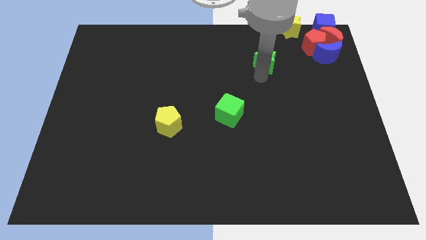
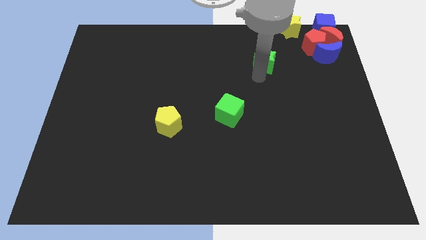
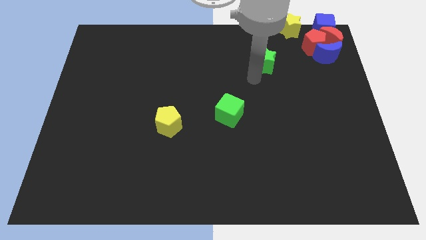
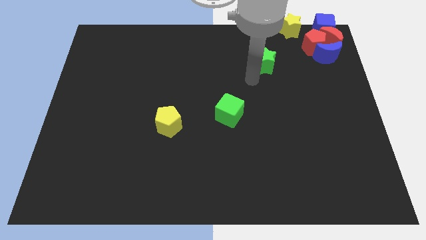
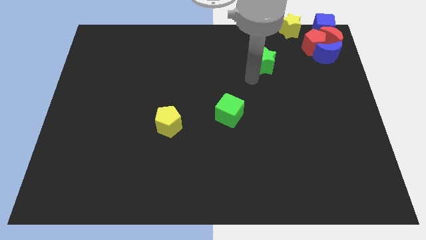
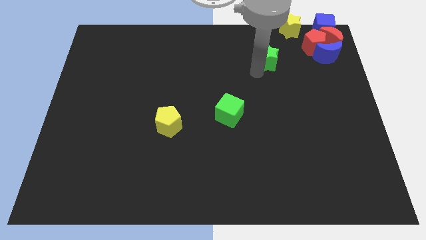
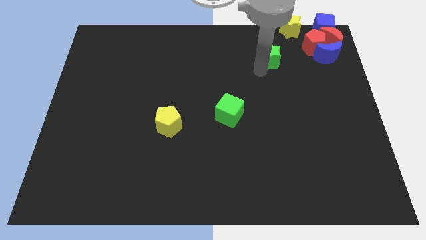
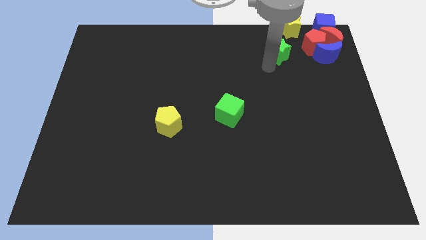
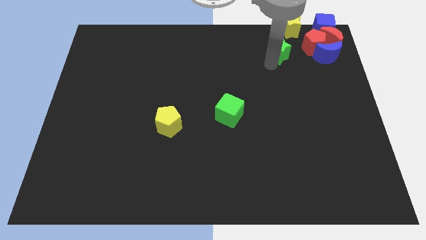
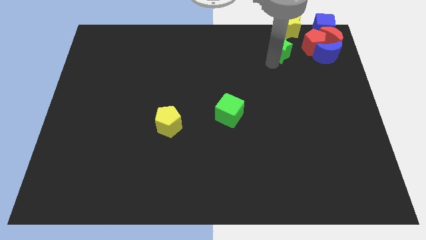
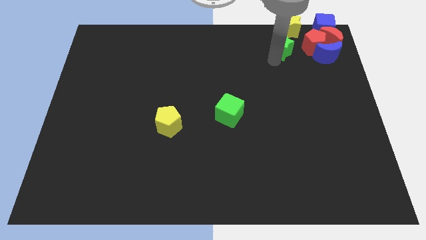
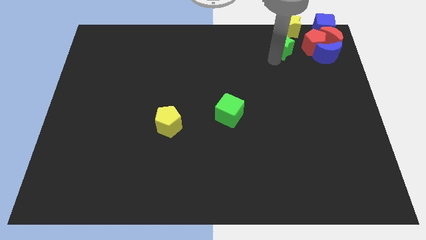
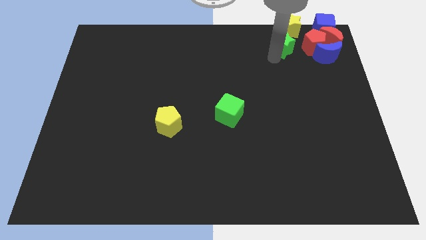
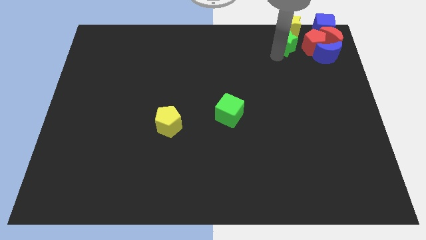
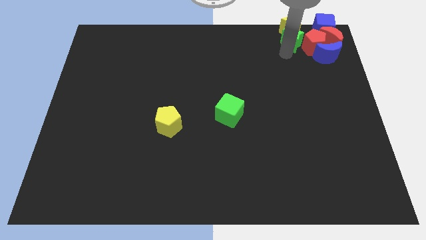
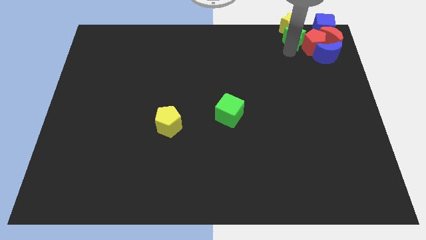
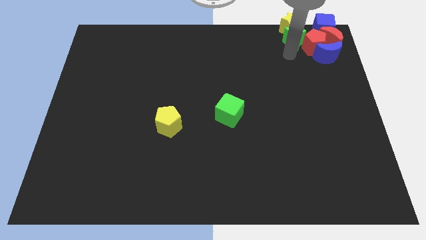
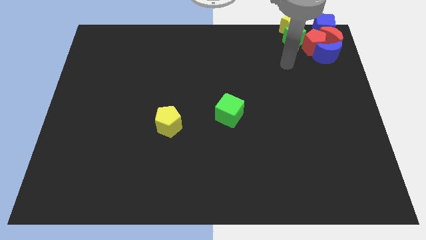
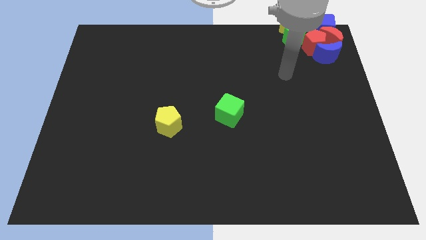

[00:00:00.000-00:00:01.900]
move the green star to the top left of red pentagon

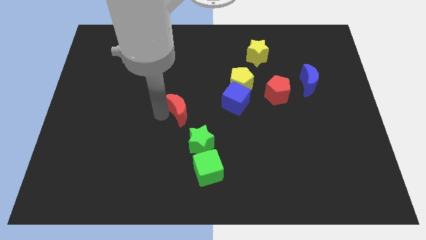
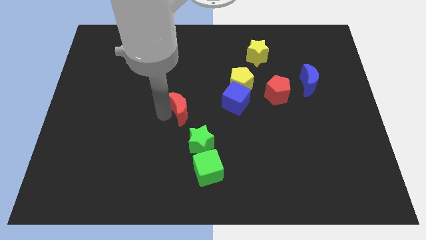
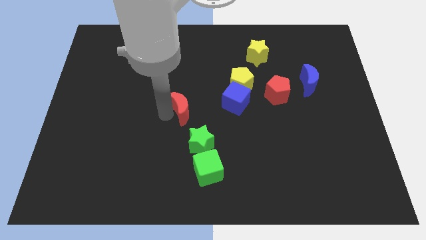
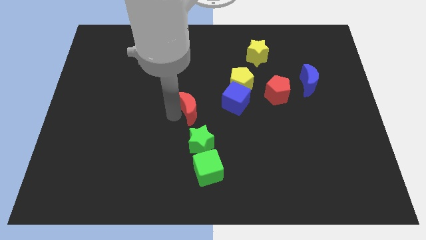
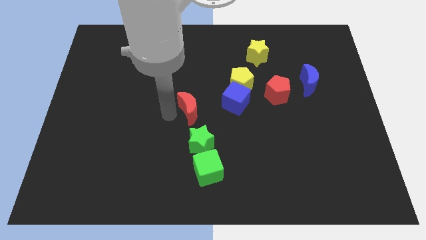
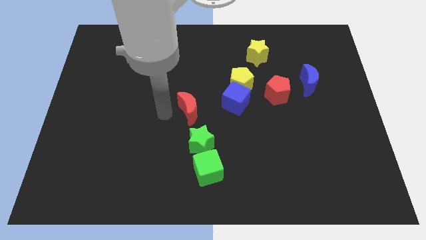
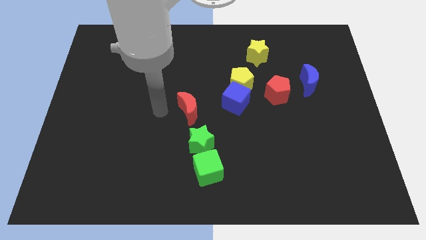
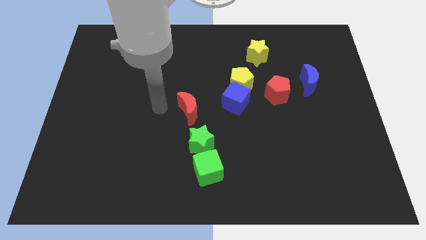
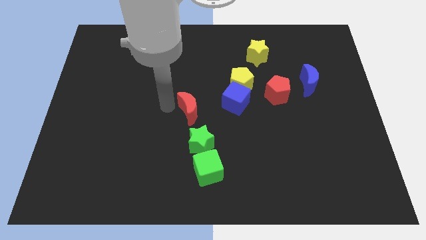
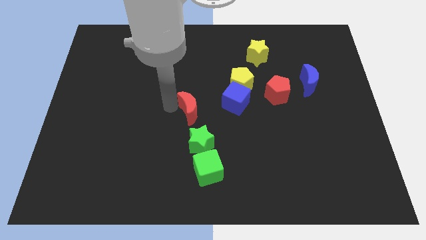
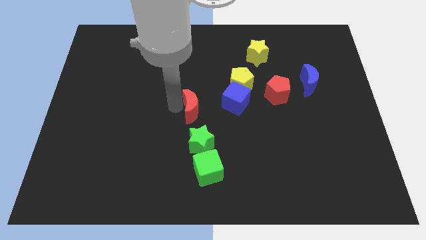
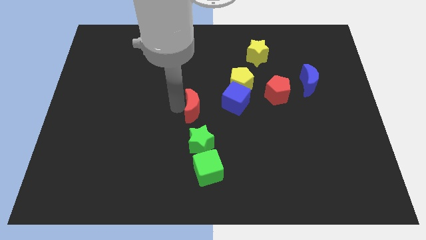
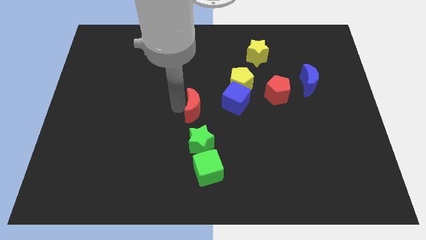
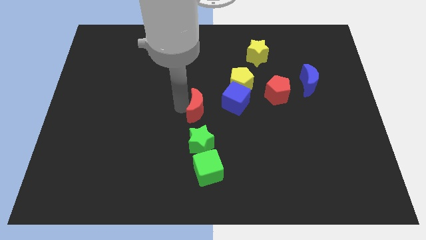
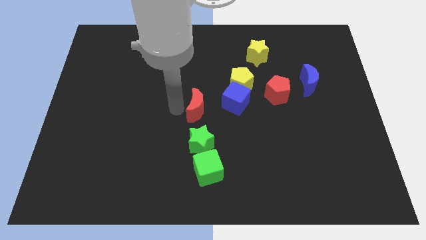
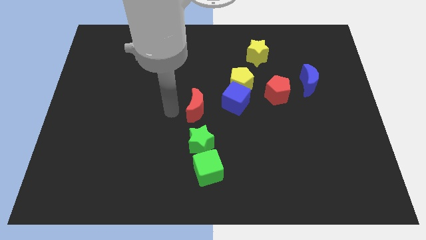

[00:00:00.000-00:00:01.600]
push the red crescent above the green star

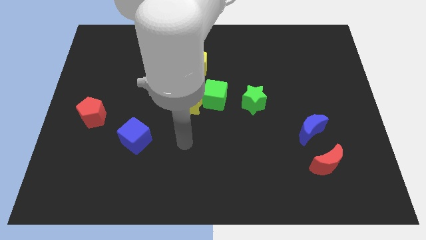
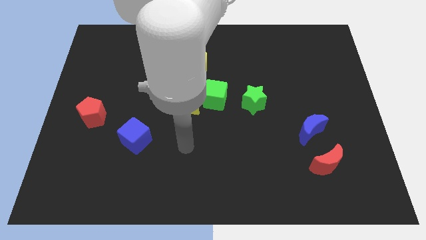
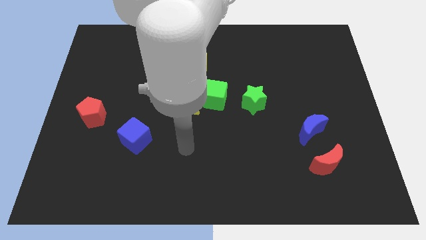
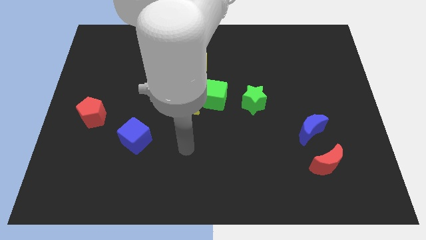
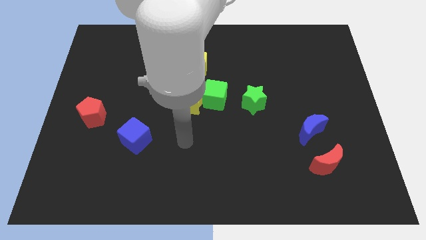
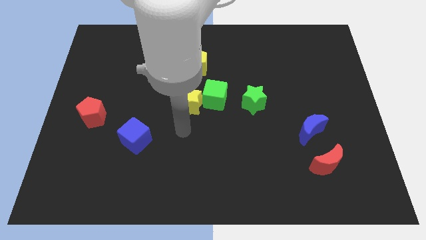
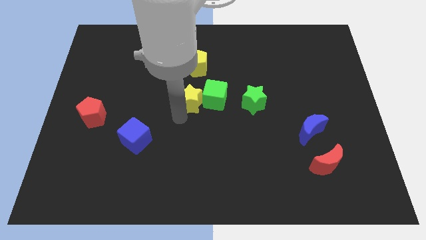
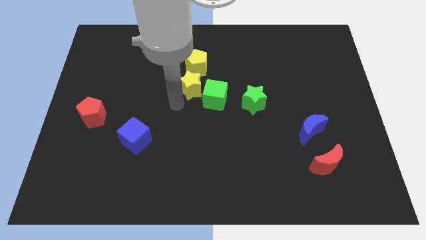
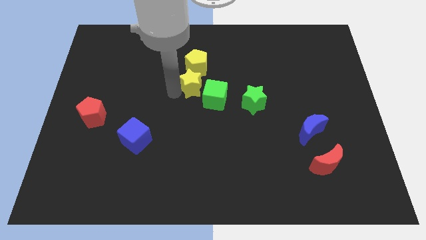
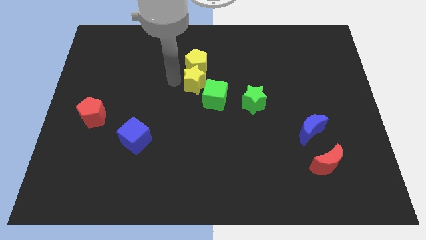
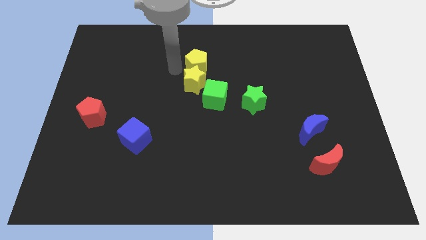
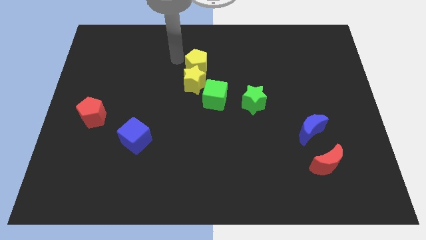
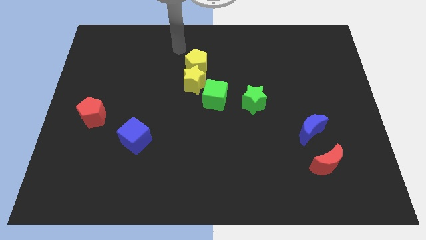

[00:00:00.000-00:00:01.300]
move the yellow star into the yellow pentagon

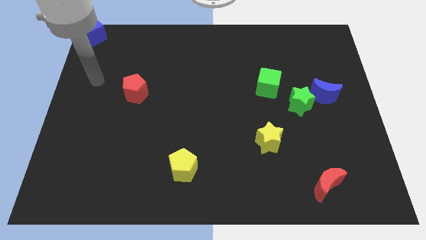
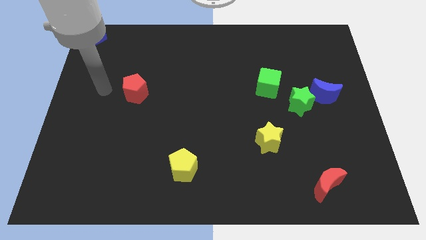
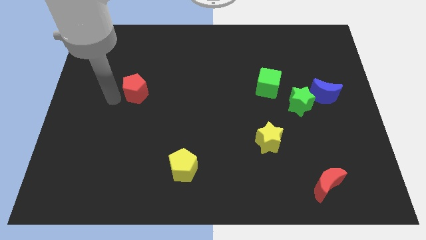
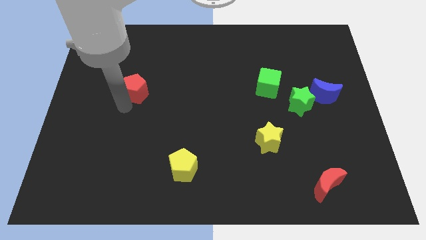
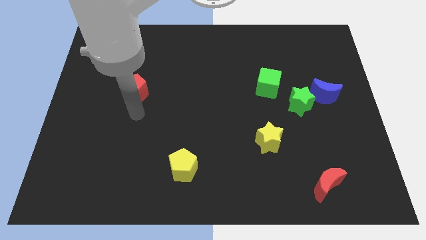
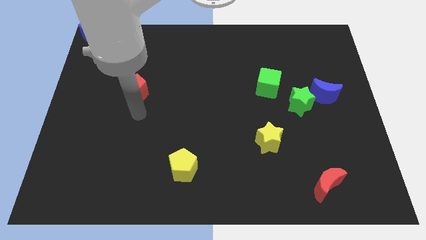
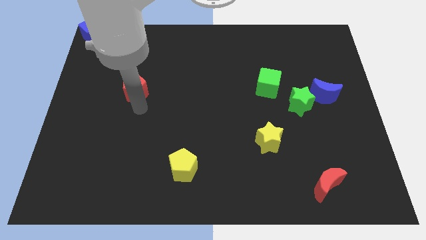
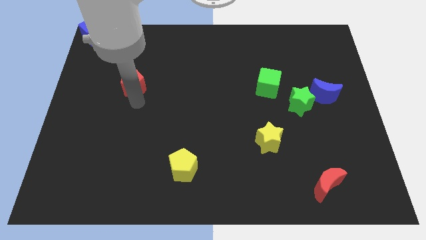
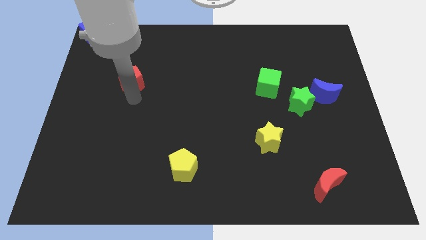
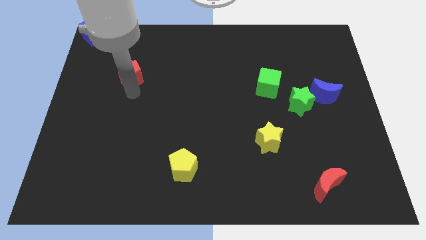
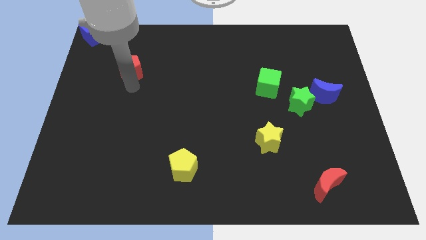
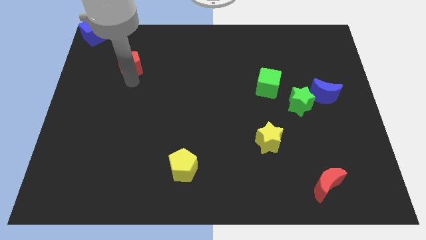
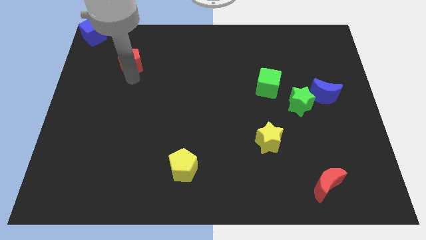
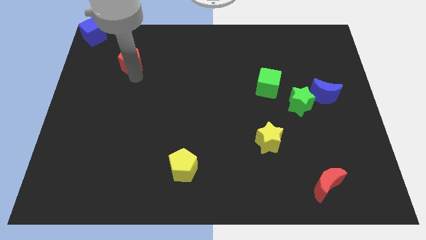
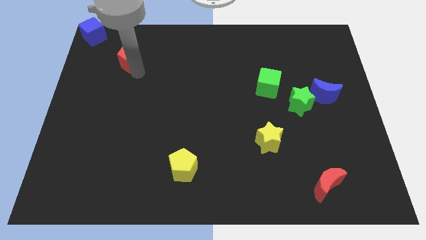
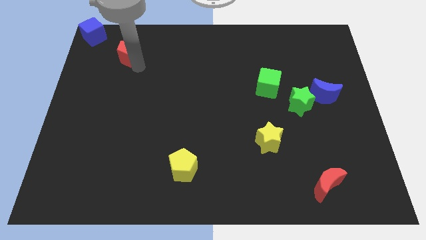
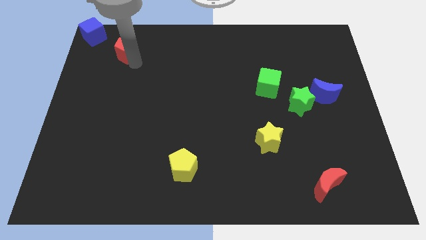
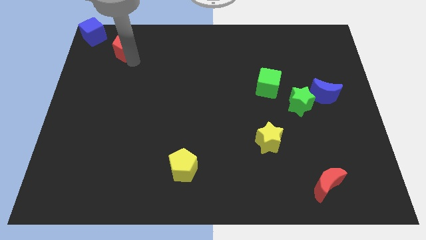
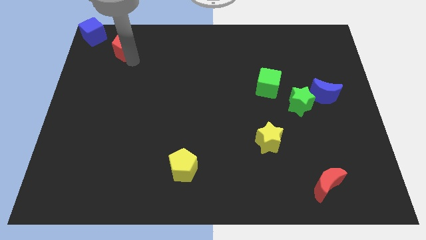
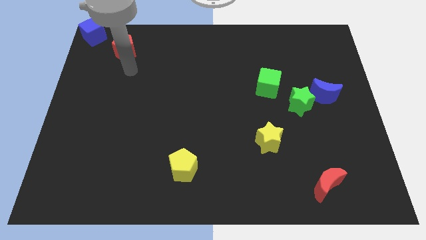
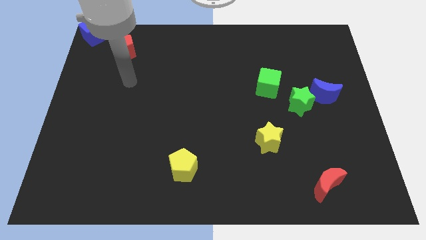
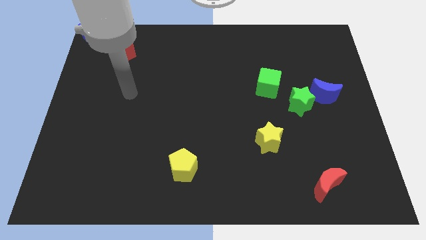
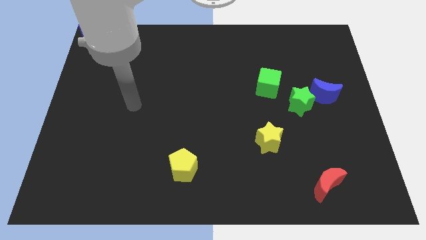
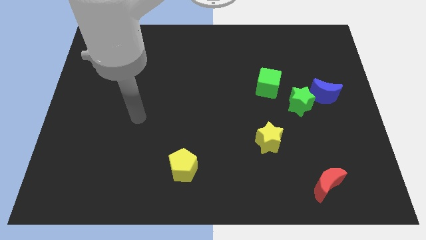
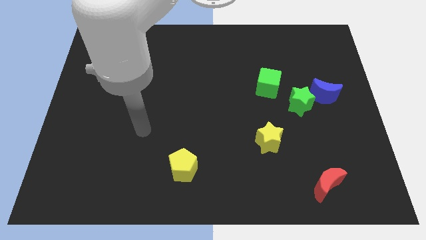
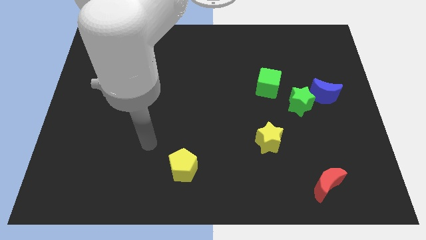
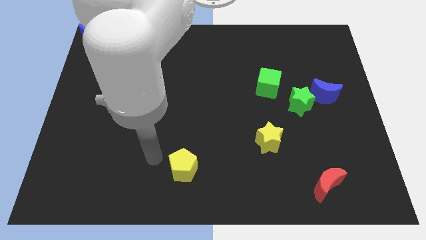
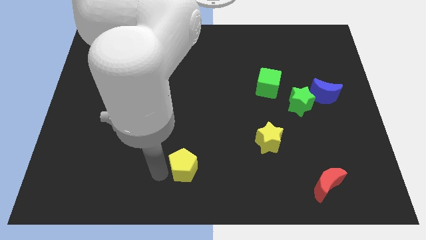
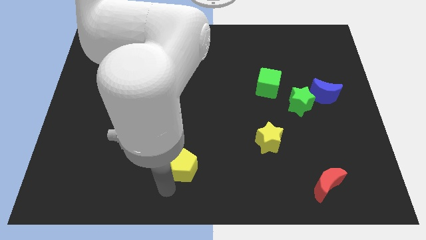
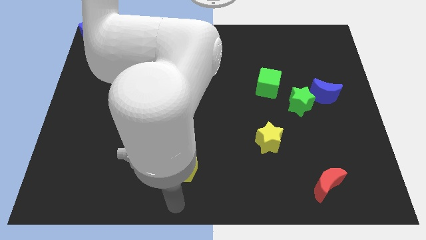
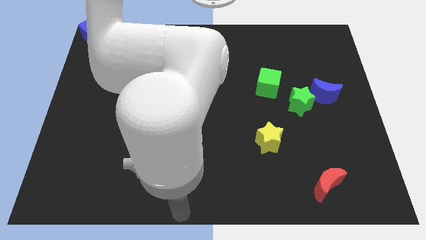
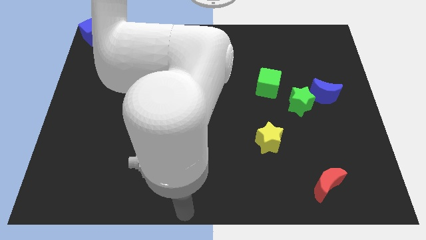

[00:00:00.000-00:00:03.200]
place the red pentagon to the bottom right of blue cube

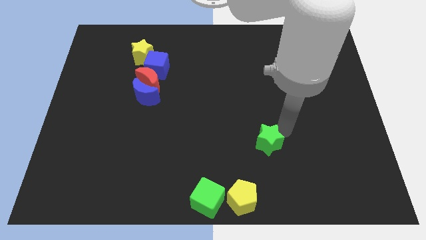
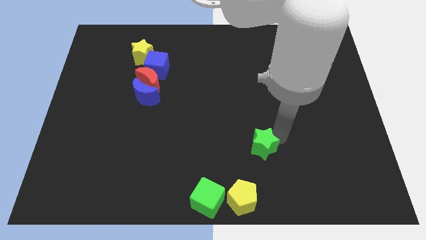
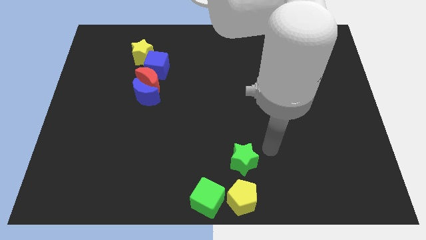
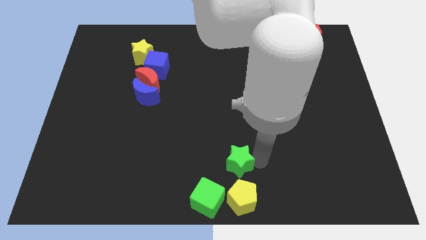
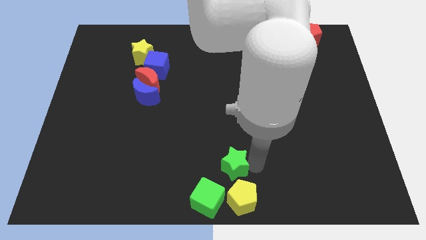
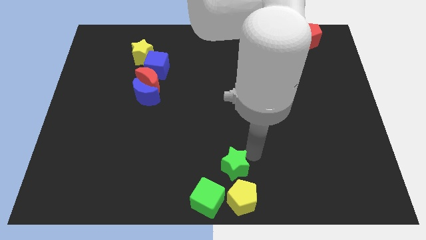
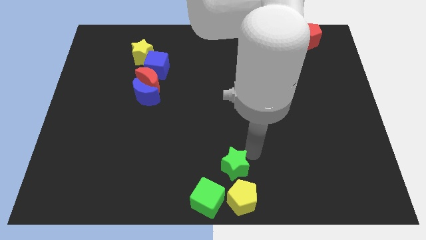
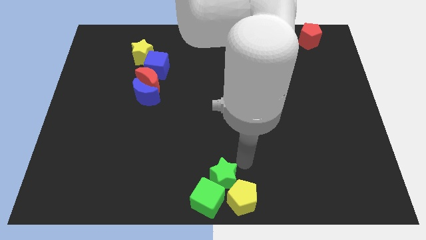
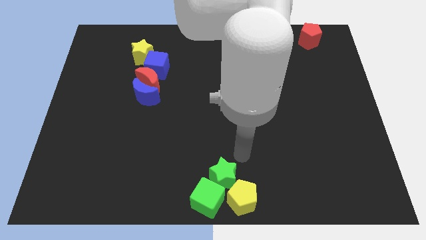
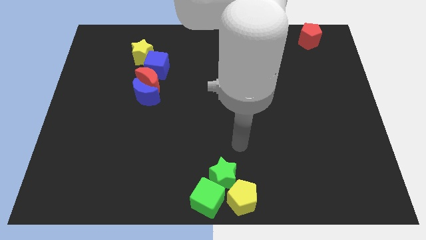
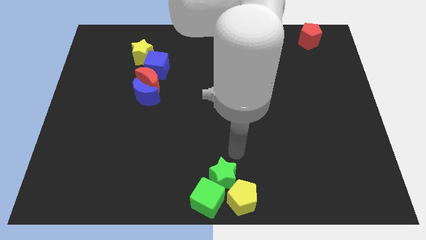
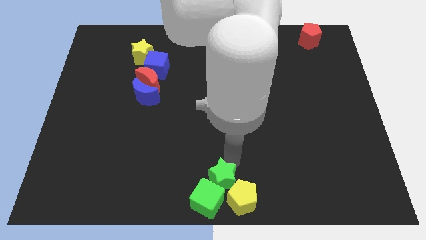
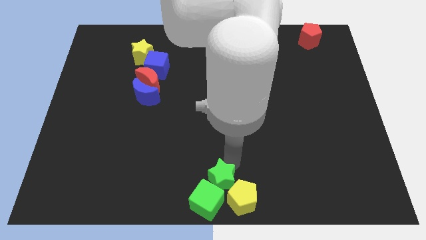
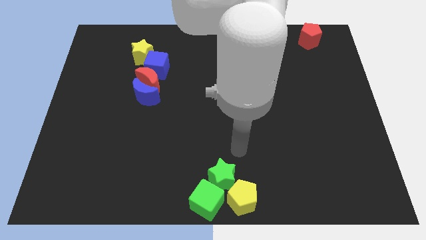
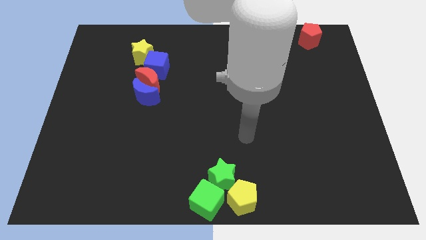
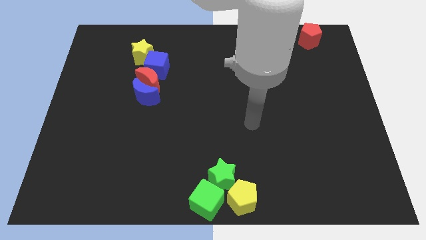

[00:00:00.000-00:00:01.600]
place green star on top of the green block
